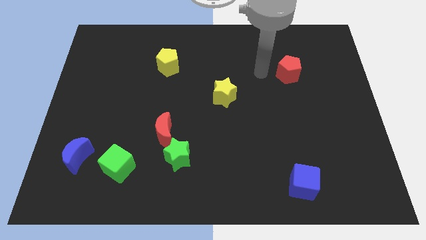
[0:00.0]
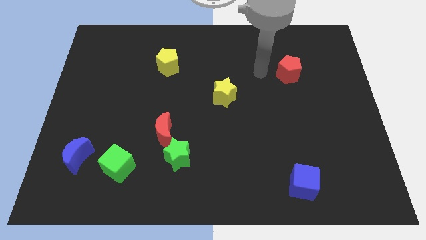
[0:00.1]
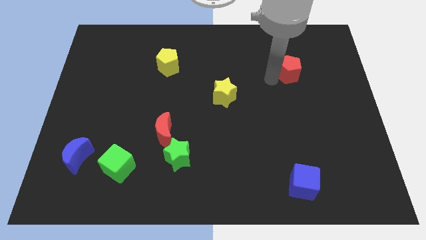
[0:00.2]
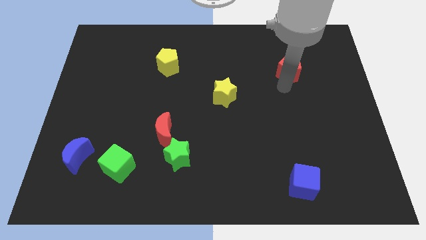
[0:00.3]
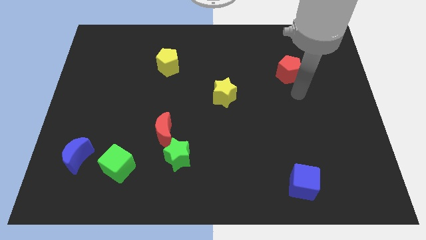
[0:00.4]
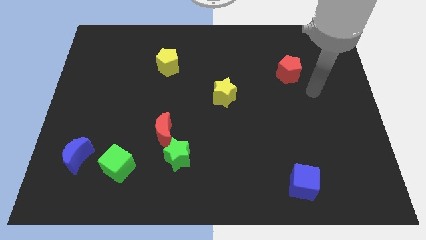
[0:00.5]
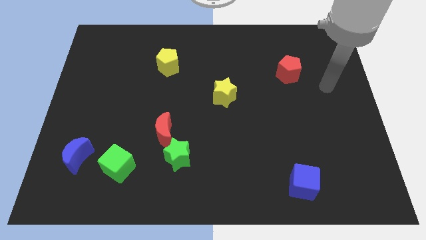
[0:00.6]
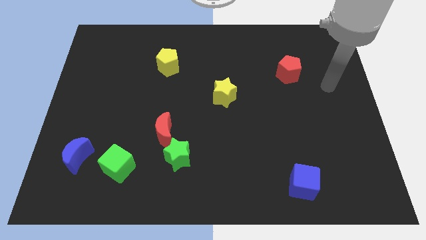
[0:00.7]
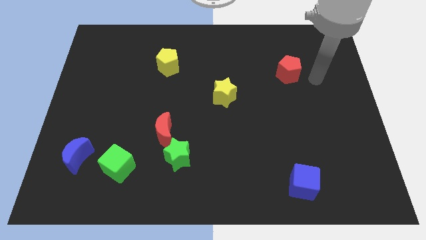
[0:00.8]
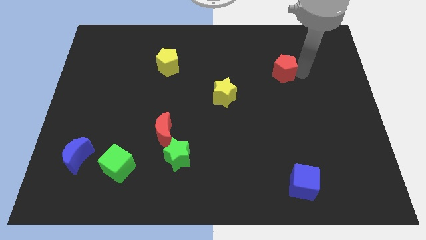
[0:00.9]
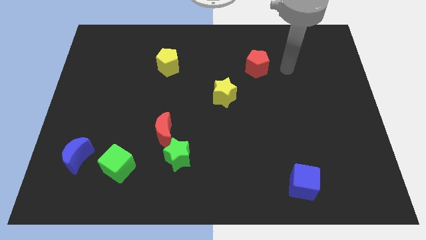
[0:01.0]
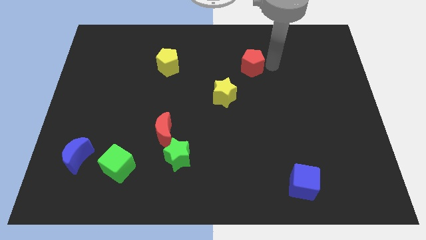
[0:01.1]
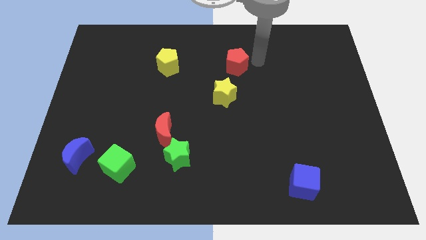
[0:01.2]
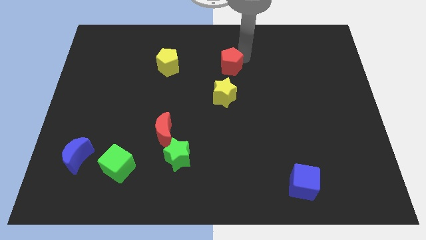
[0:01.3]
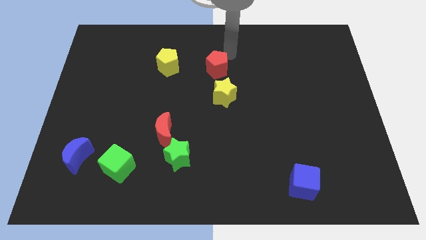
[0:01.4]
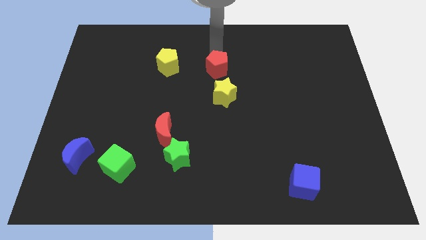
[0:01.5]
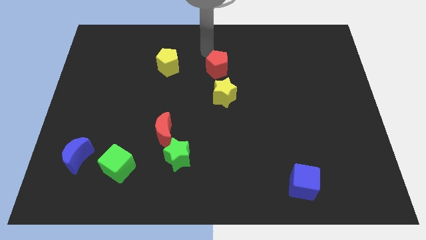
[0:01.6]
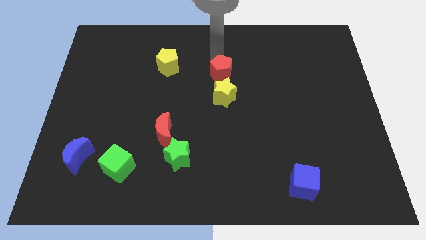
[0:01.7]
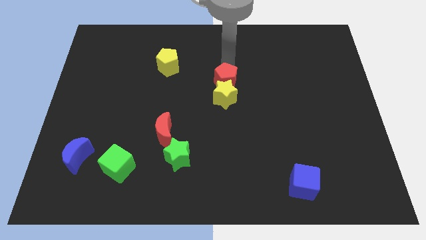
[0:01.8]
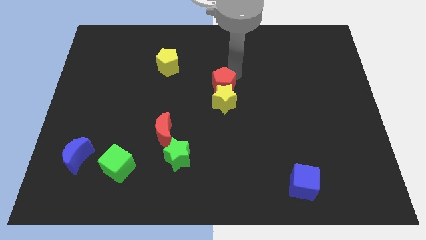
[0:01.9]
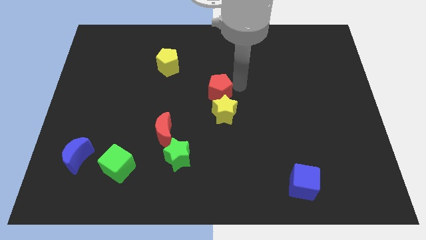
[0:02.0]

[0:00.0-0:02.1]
push the red pentagon into the yellow star

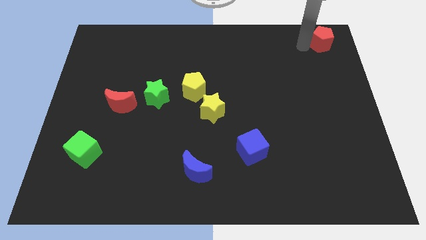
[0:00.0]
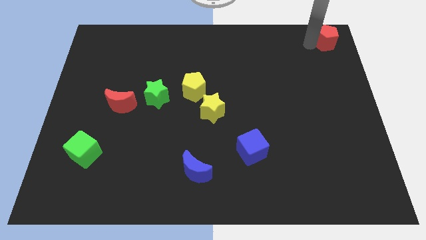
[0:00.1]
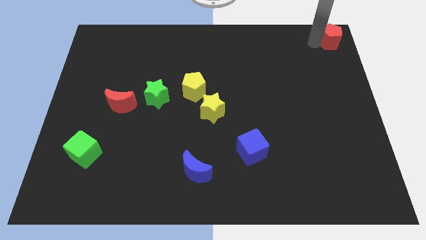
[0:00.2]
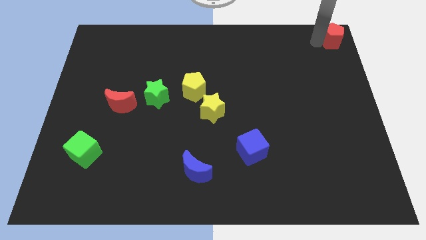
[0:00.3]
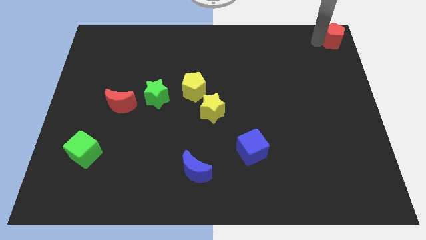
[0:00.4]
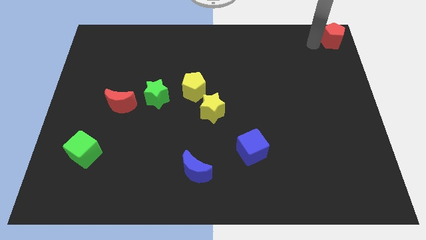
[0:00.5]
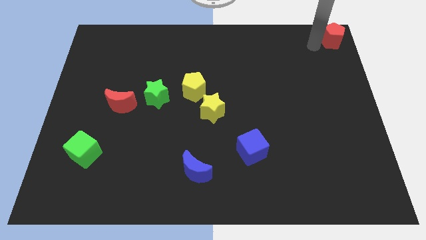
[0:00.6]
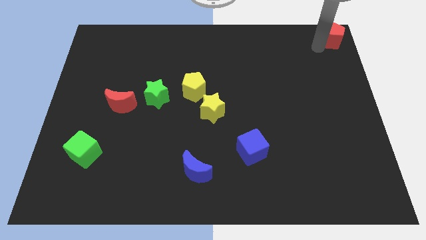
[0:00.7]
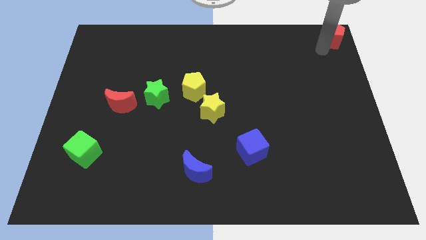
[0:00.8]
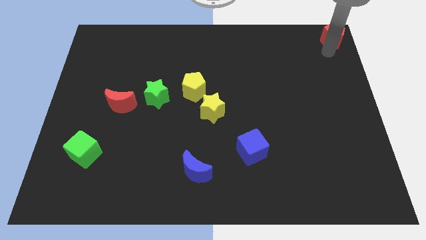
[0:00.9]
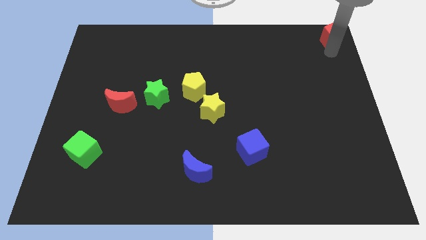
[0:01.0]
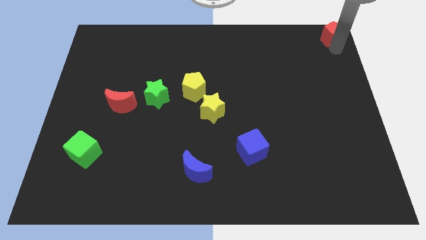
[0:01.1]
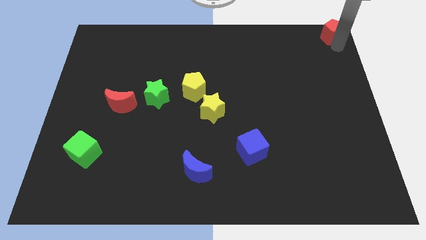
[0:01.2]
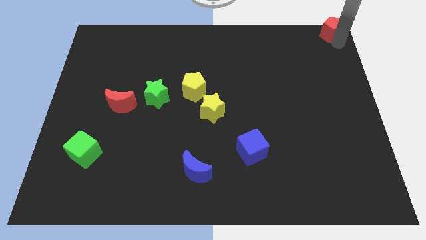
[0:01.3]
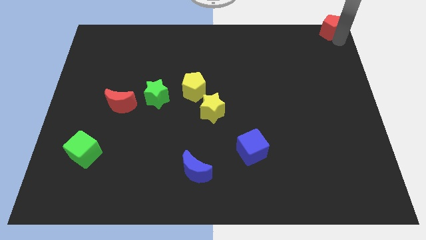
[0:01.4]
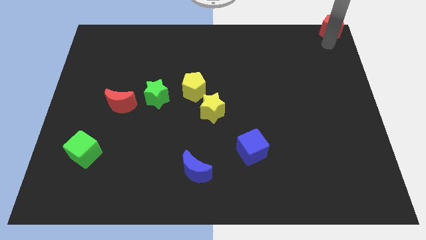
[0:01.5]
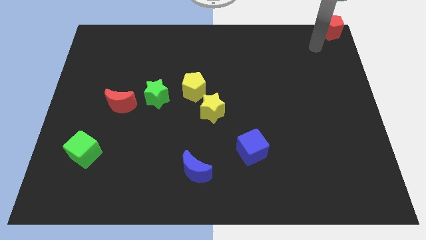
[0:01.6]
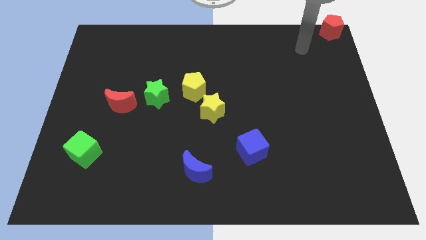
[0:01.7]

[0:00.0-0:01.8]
move the red pentagon to the top right corner

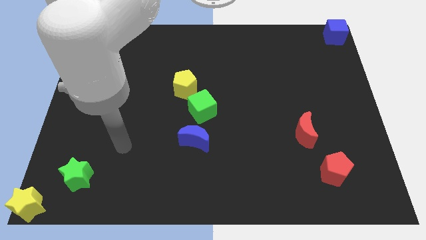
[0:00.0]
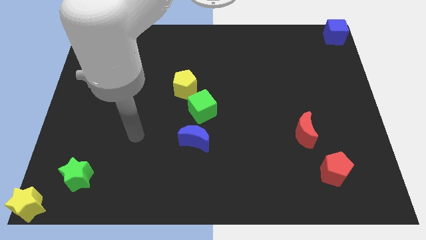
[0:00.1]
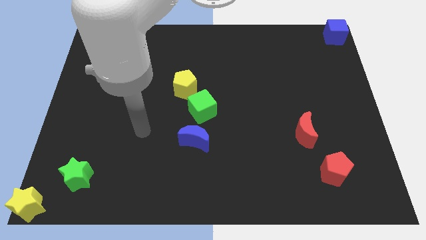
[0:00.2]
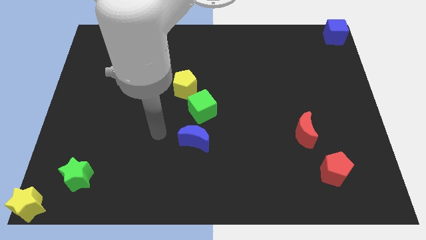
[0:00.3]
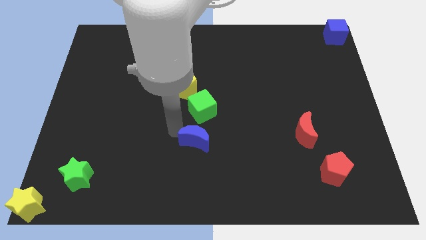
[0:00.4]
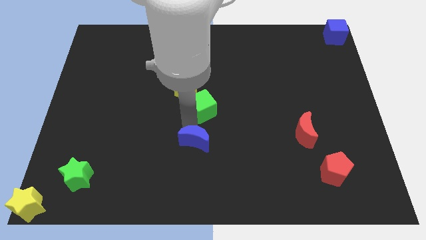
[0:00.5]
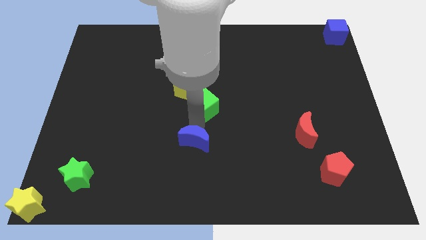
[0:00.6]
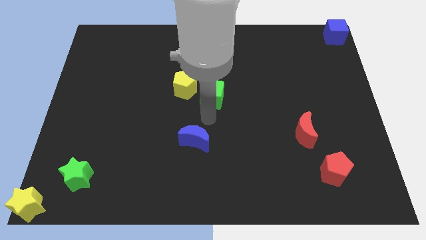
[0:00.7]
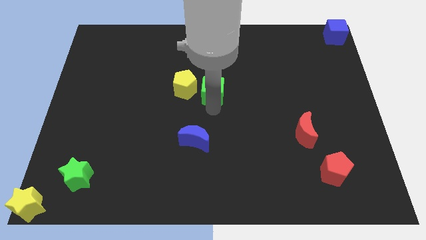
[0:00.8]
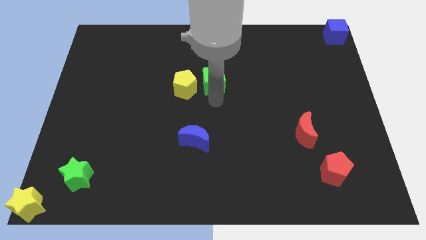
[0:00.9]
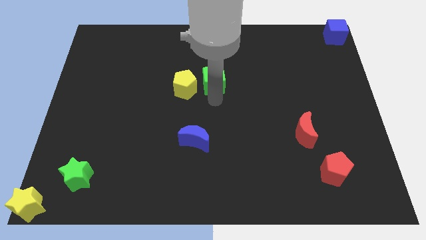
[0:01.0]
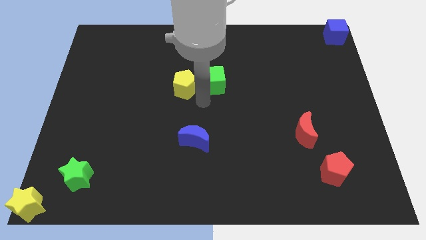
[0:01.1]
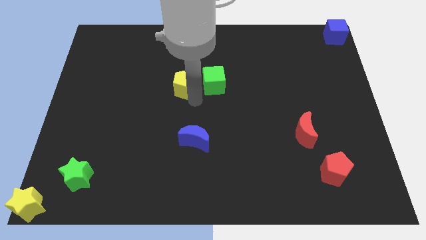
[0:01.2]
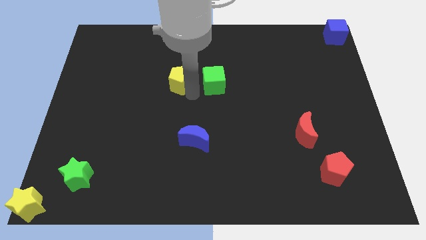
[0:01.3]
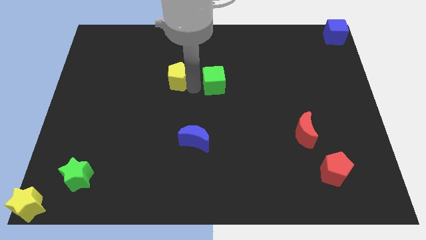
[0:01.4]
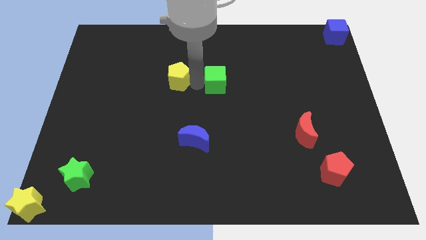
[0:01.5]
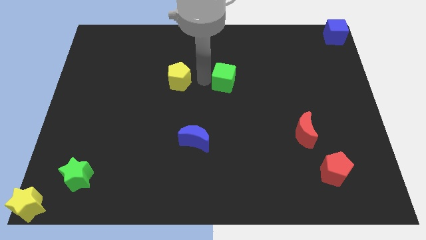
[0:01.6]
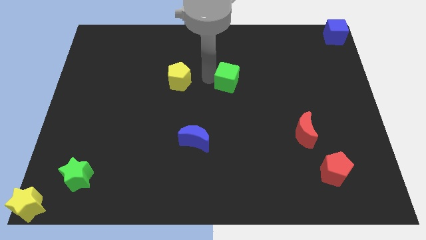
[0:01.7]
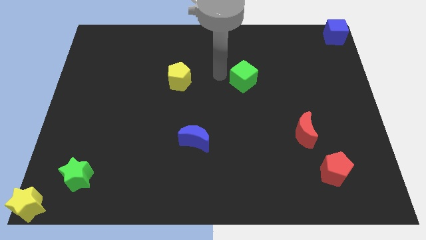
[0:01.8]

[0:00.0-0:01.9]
move green cube away from the yellow pentagon

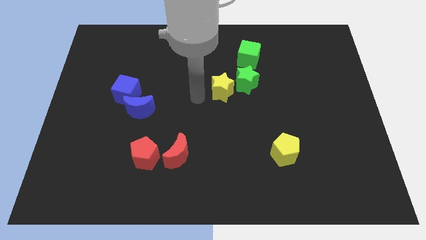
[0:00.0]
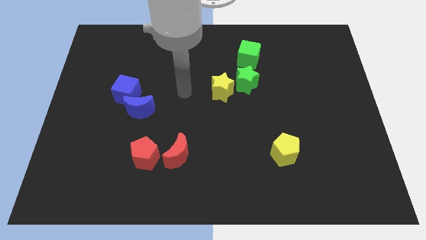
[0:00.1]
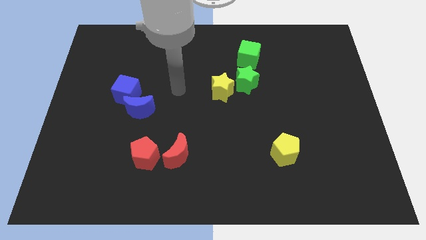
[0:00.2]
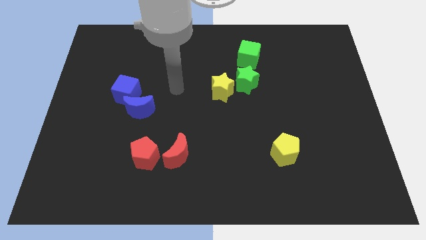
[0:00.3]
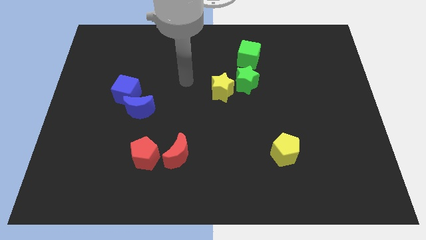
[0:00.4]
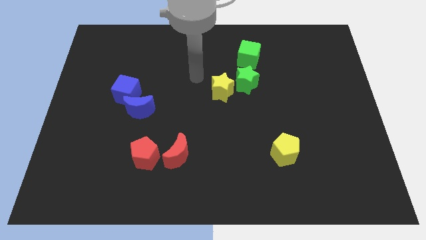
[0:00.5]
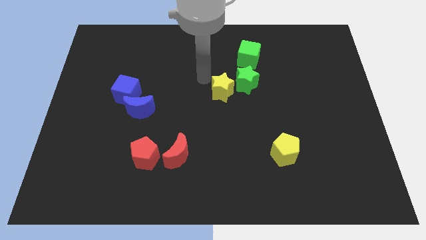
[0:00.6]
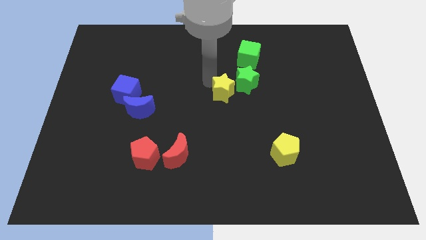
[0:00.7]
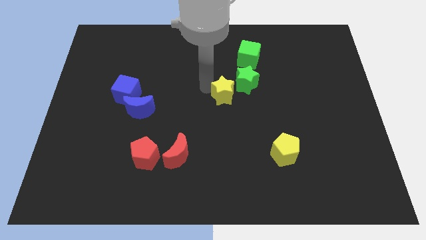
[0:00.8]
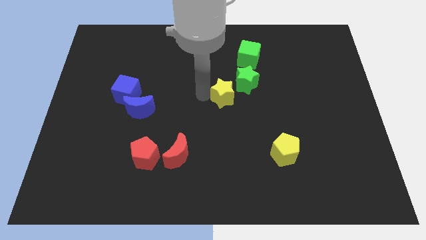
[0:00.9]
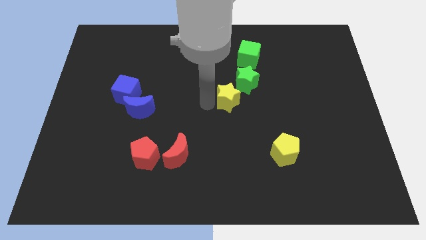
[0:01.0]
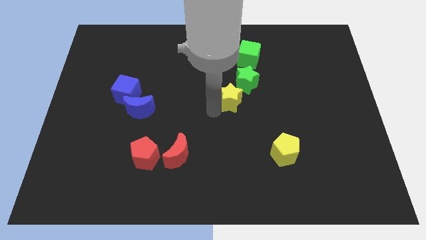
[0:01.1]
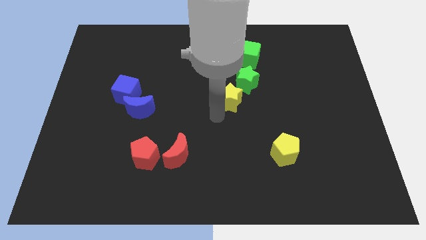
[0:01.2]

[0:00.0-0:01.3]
place the yellow star to the right of the blue crescent

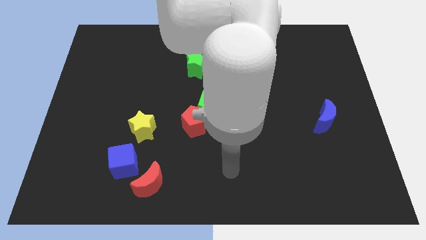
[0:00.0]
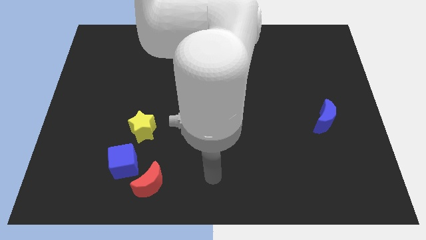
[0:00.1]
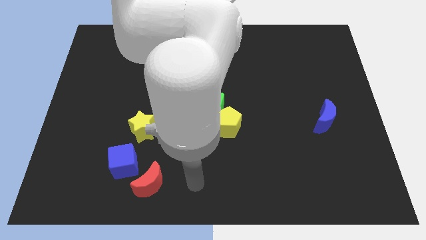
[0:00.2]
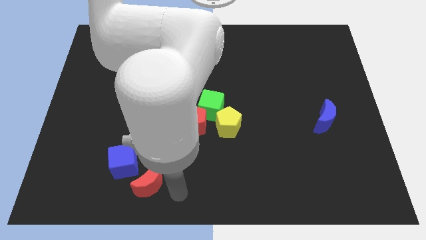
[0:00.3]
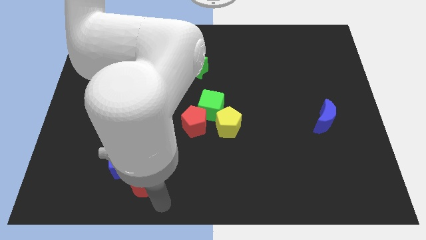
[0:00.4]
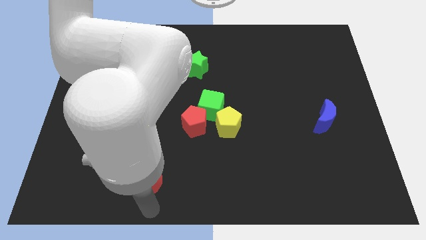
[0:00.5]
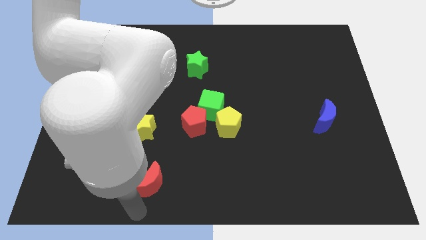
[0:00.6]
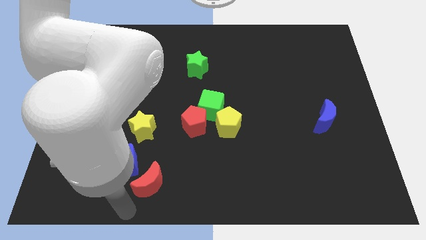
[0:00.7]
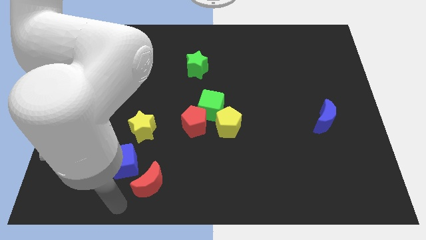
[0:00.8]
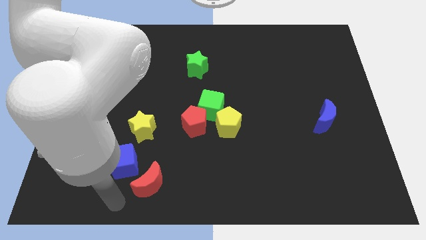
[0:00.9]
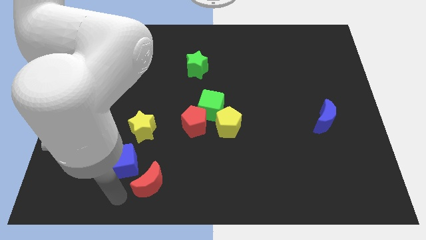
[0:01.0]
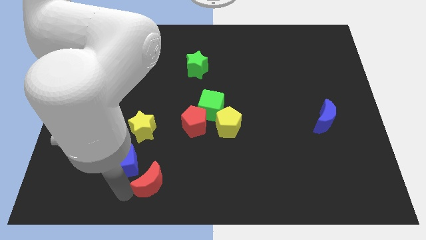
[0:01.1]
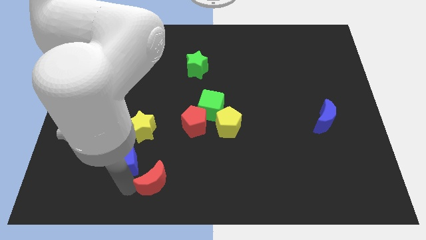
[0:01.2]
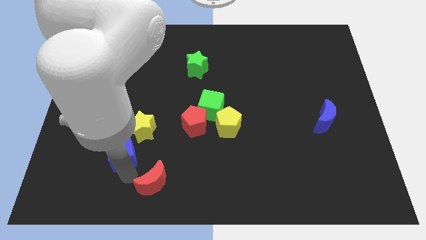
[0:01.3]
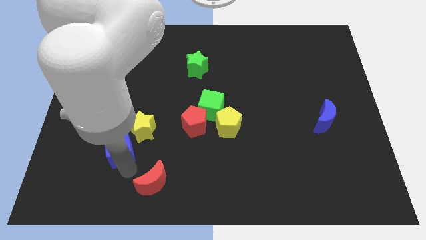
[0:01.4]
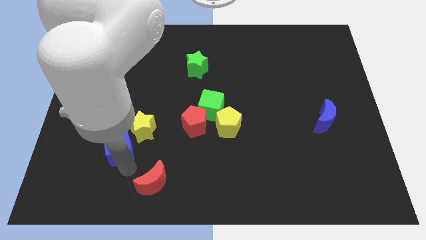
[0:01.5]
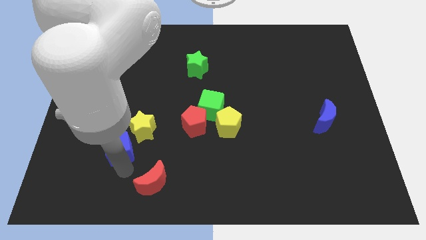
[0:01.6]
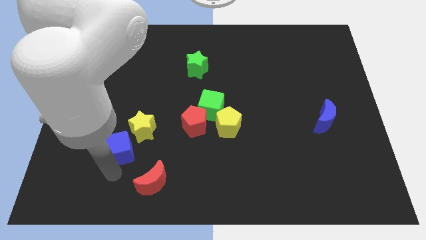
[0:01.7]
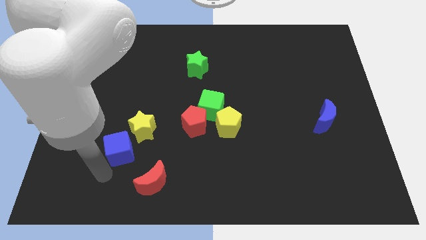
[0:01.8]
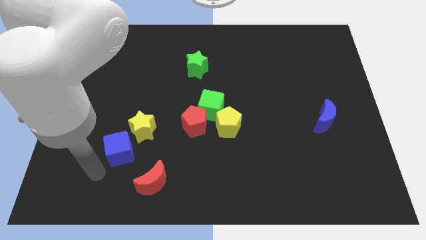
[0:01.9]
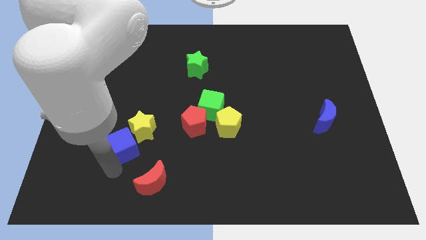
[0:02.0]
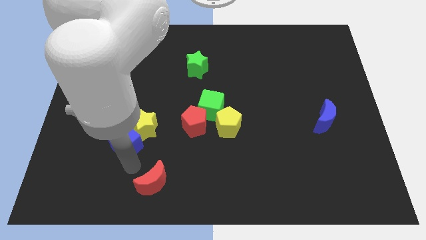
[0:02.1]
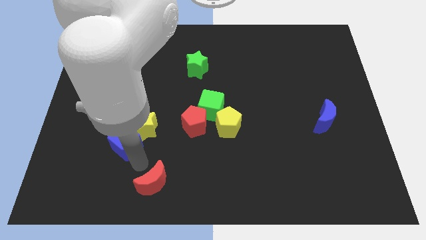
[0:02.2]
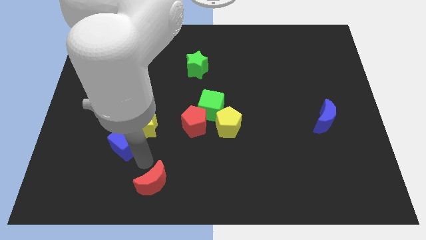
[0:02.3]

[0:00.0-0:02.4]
push blue cube slightly upwards
